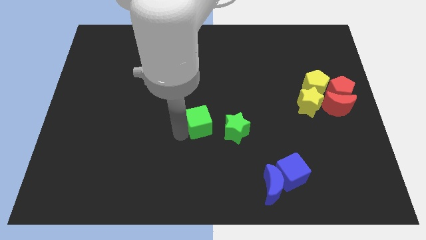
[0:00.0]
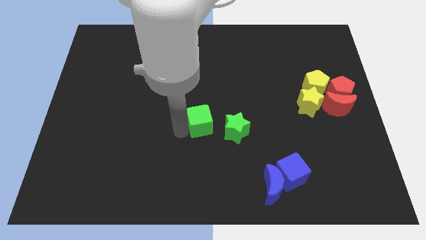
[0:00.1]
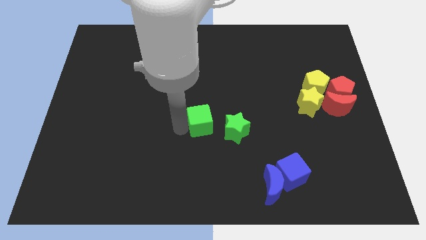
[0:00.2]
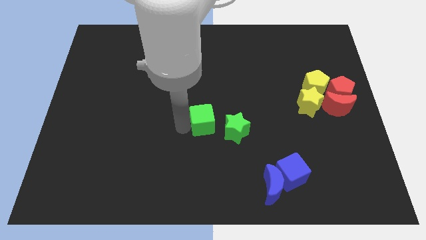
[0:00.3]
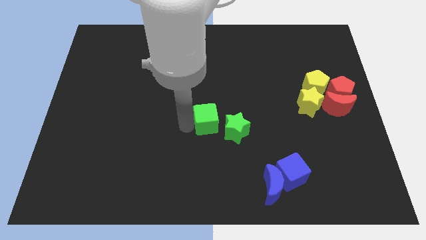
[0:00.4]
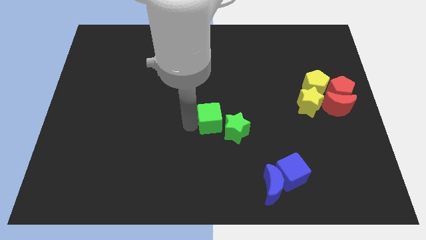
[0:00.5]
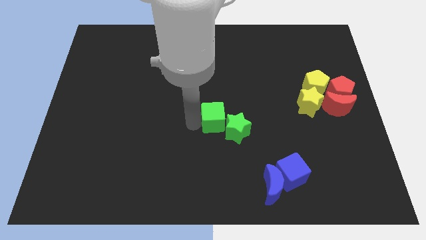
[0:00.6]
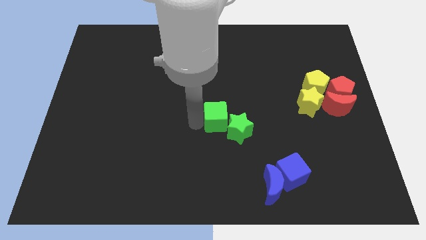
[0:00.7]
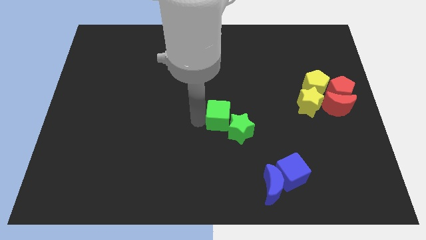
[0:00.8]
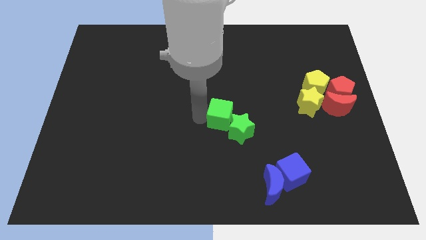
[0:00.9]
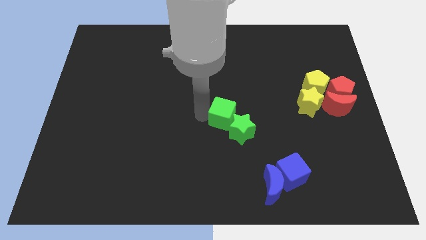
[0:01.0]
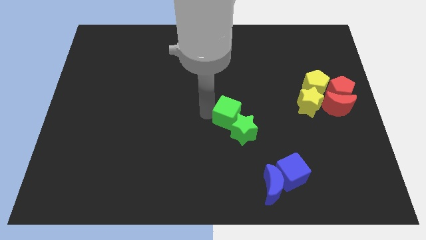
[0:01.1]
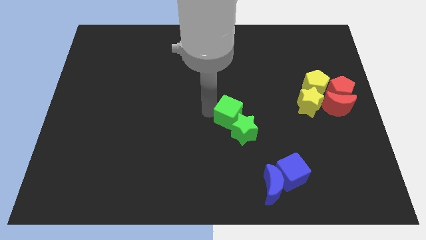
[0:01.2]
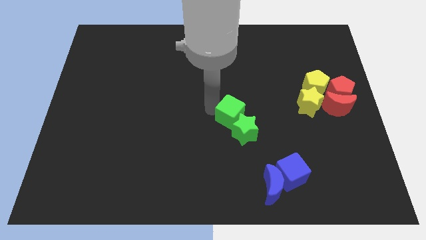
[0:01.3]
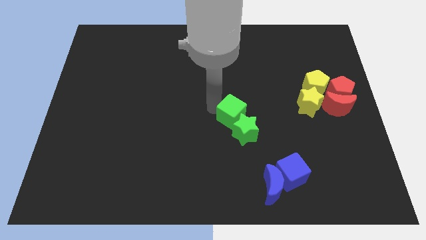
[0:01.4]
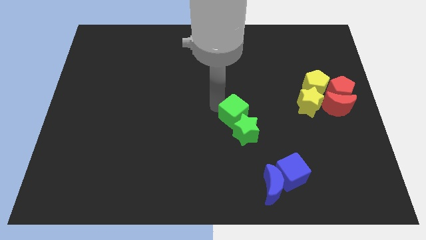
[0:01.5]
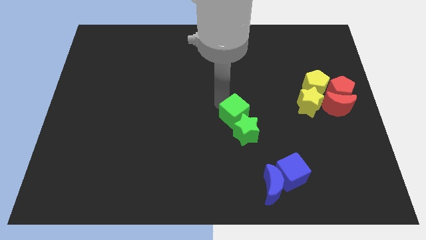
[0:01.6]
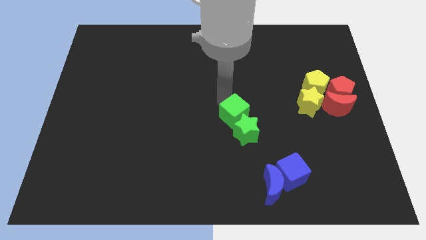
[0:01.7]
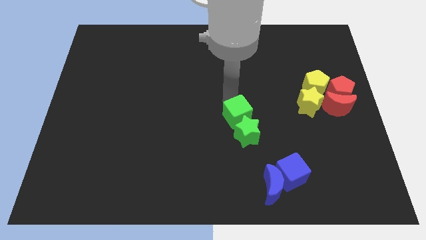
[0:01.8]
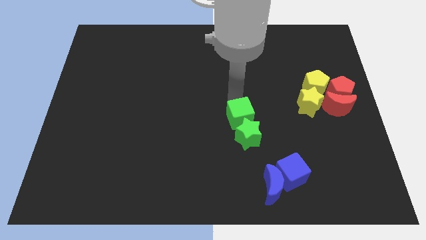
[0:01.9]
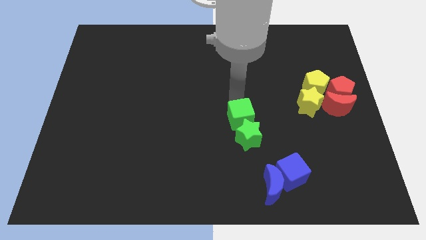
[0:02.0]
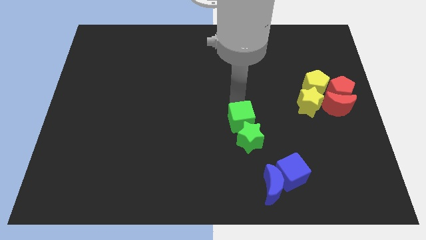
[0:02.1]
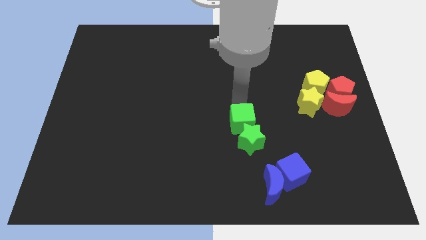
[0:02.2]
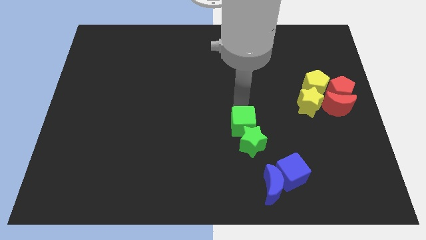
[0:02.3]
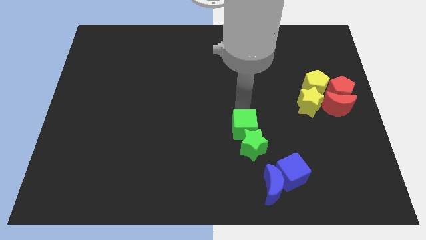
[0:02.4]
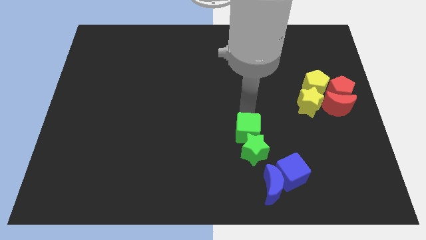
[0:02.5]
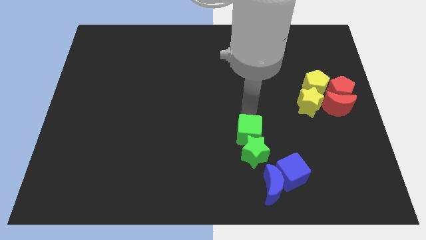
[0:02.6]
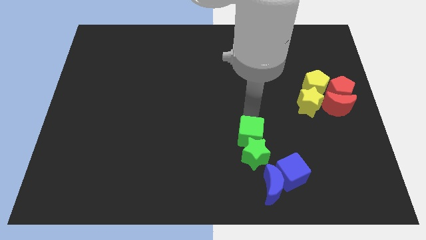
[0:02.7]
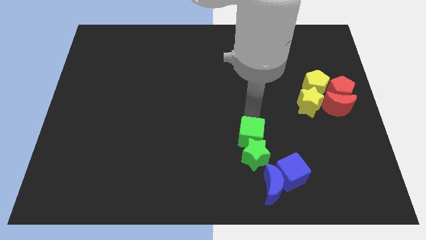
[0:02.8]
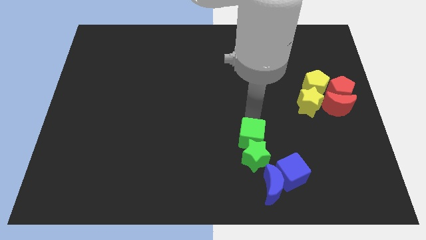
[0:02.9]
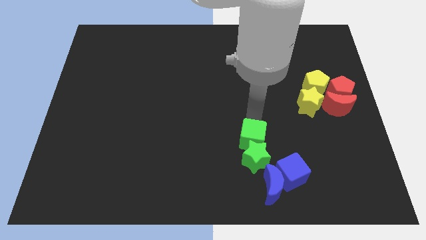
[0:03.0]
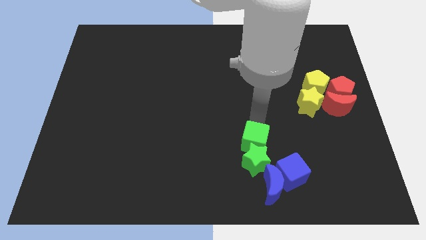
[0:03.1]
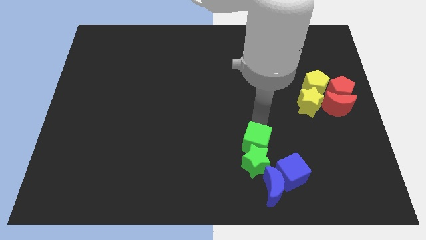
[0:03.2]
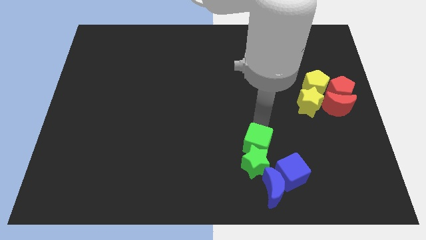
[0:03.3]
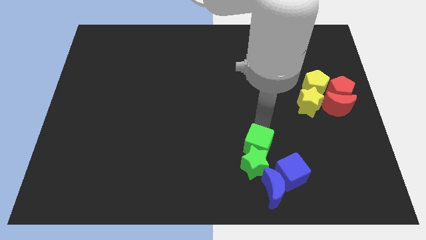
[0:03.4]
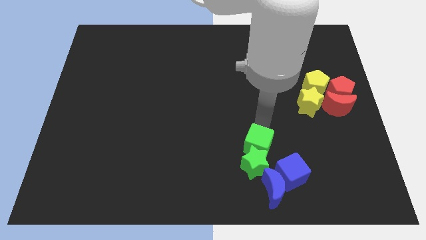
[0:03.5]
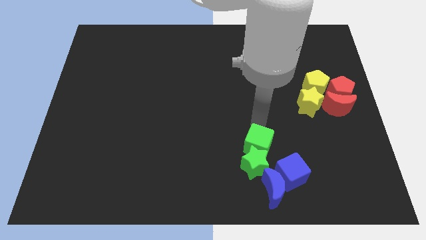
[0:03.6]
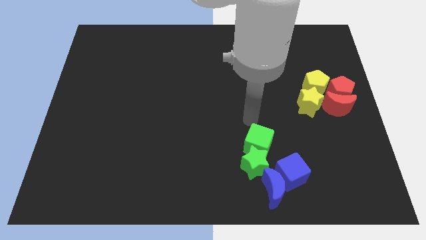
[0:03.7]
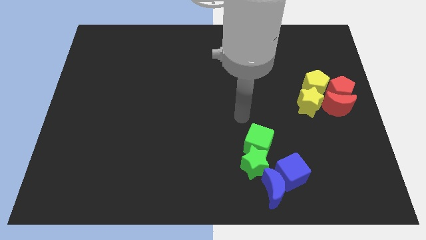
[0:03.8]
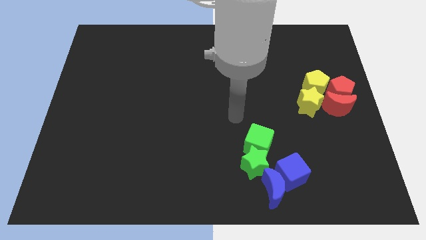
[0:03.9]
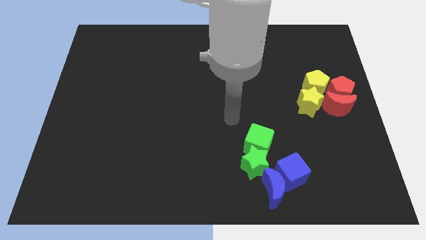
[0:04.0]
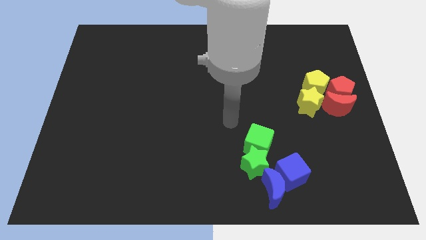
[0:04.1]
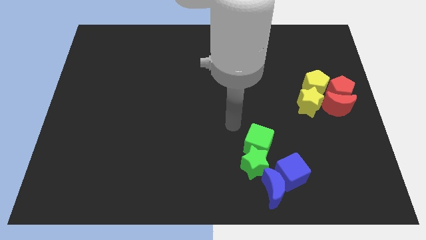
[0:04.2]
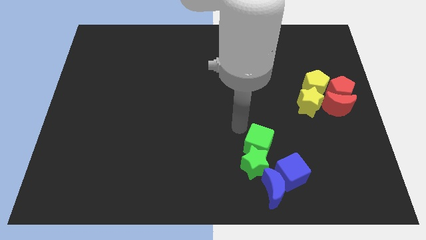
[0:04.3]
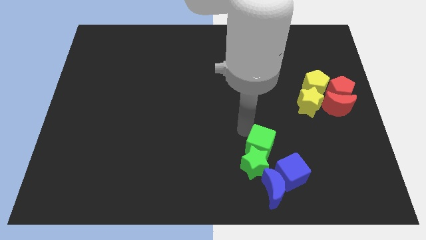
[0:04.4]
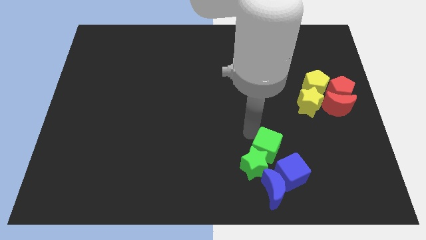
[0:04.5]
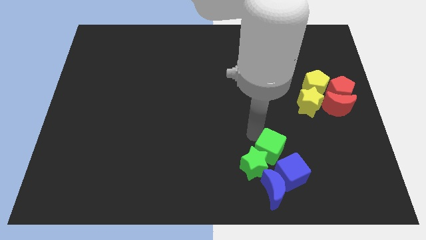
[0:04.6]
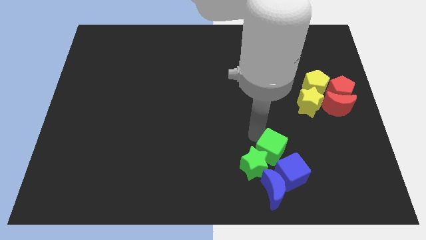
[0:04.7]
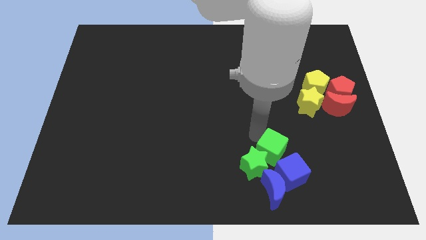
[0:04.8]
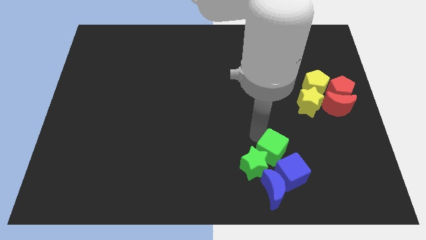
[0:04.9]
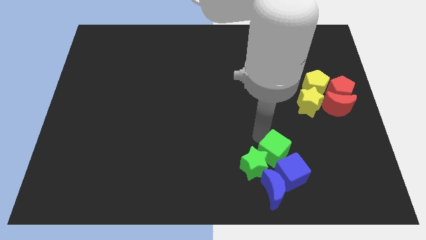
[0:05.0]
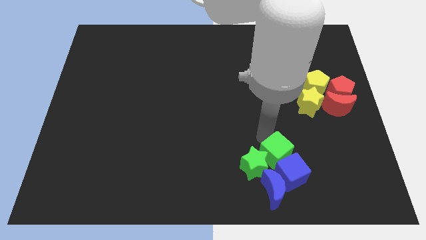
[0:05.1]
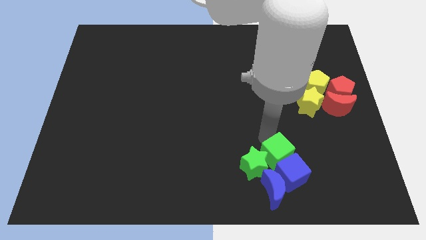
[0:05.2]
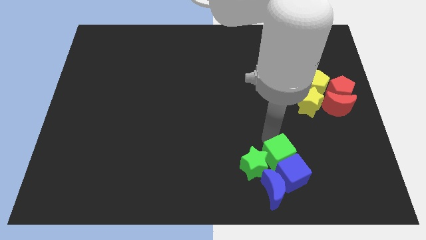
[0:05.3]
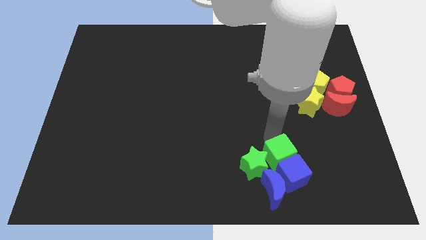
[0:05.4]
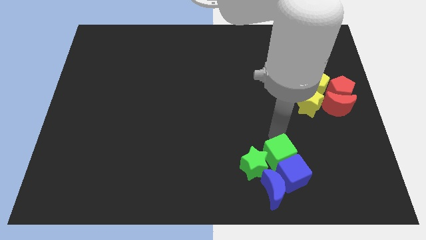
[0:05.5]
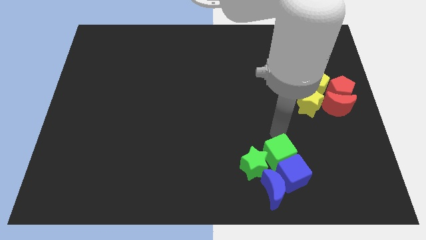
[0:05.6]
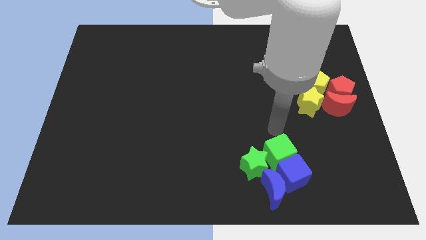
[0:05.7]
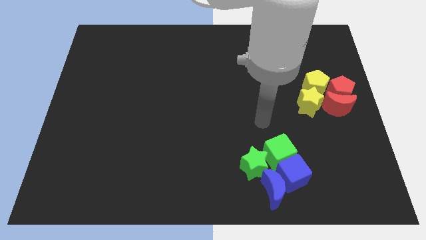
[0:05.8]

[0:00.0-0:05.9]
place the green star above the blue moon

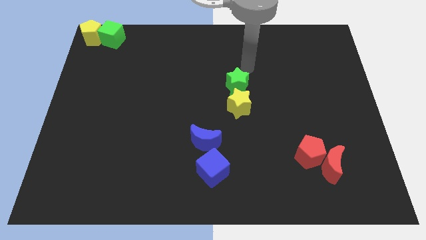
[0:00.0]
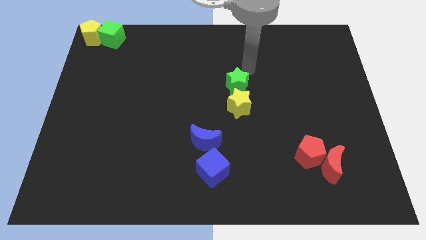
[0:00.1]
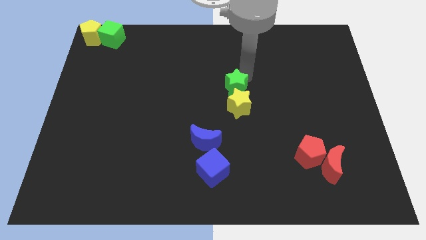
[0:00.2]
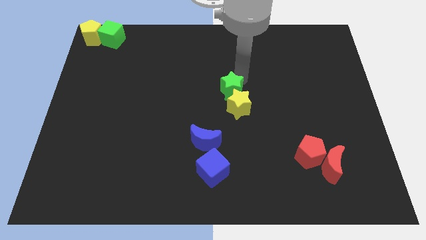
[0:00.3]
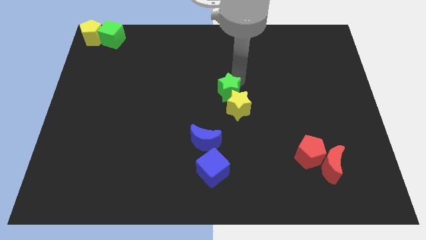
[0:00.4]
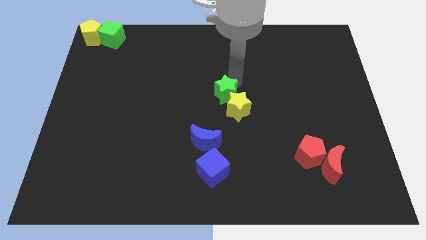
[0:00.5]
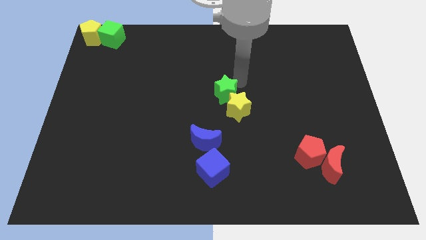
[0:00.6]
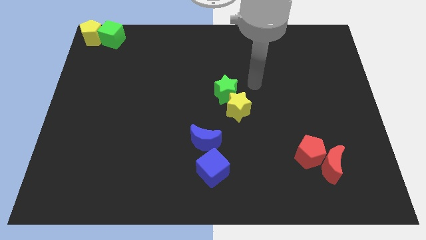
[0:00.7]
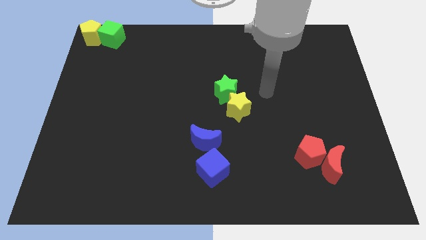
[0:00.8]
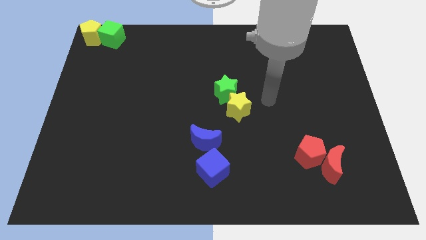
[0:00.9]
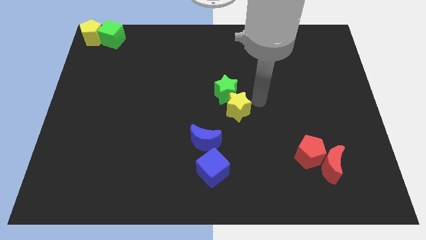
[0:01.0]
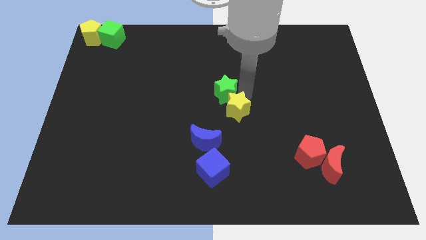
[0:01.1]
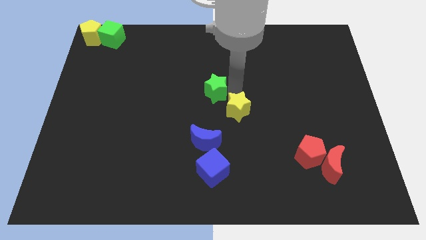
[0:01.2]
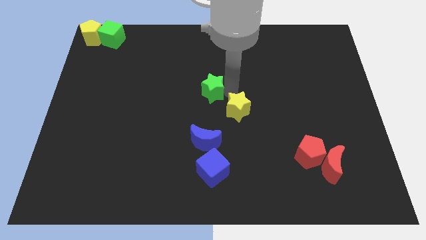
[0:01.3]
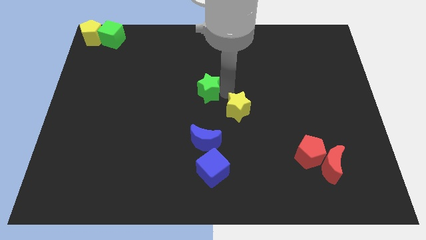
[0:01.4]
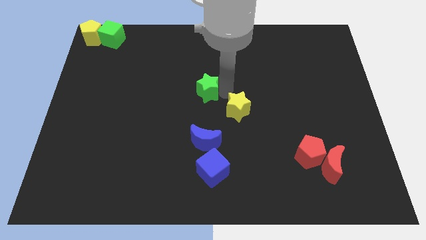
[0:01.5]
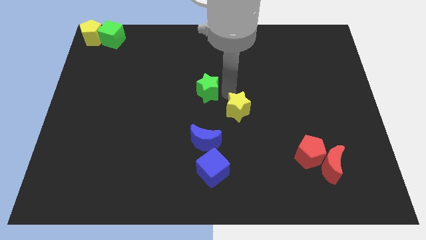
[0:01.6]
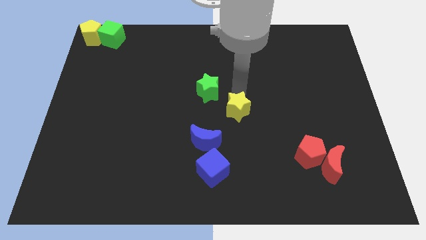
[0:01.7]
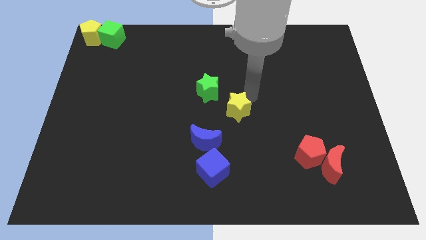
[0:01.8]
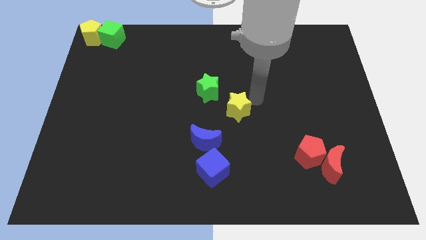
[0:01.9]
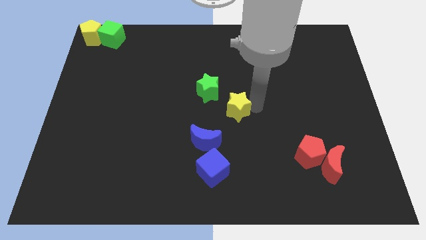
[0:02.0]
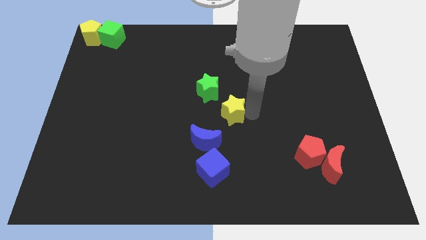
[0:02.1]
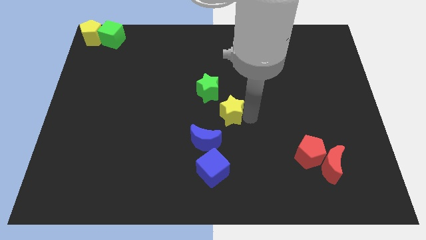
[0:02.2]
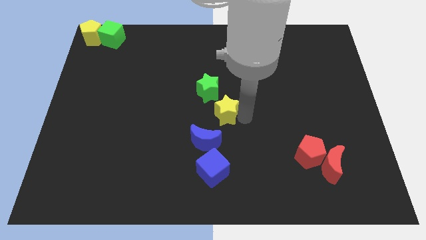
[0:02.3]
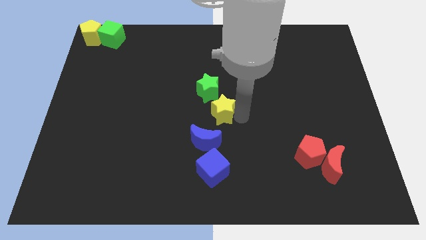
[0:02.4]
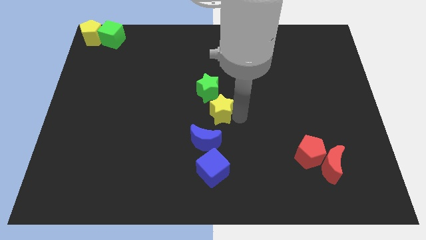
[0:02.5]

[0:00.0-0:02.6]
slightly push the green and yellow star towards the left side

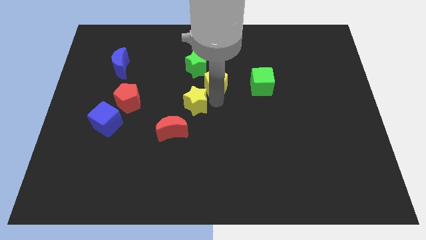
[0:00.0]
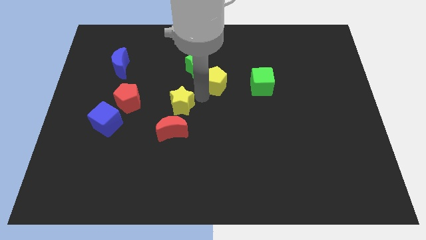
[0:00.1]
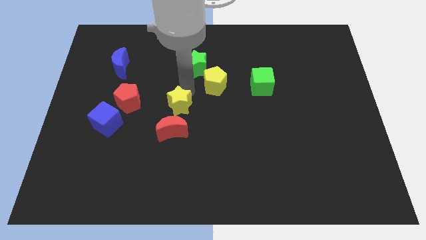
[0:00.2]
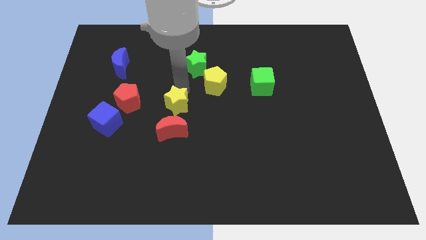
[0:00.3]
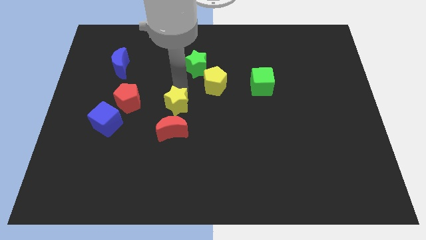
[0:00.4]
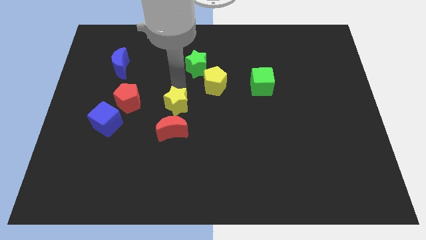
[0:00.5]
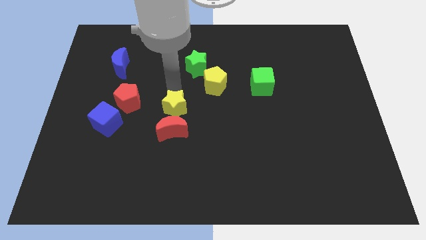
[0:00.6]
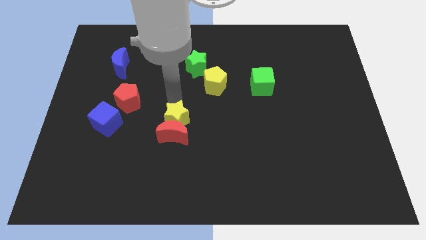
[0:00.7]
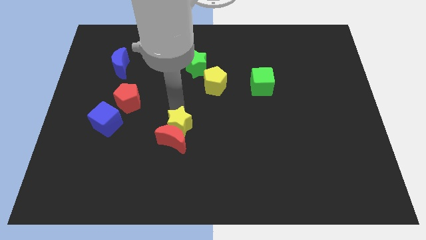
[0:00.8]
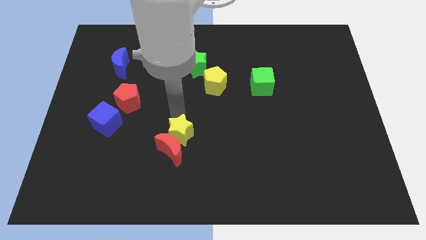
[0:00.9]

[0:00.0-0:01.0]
push the yellow star into the red crescent
